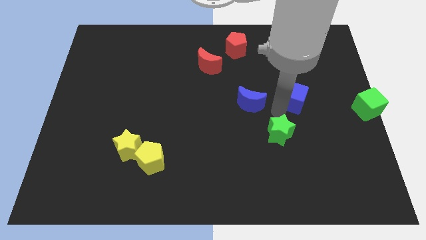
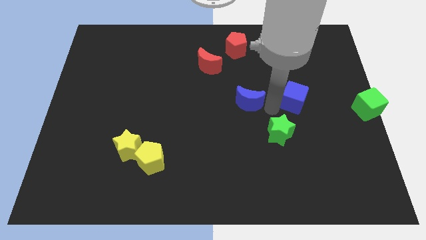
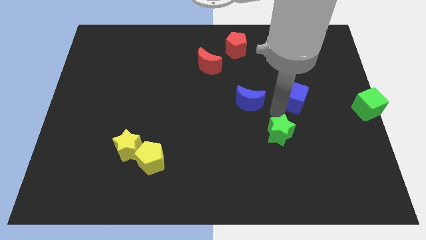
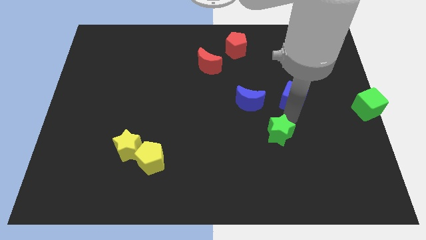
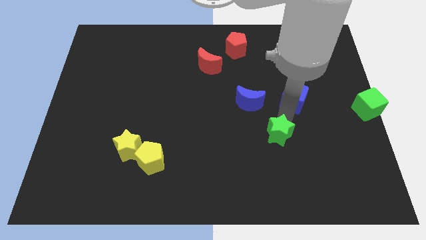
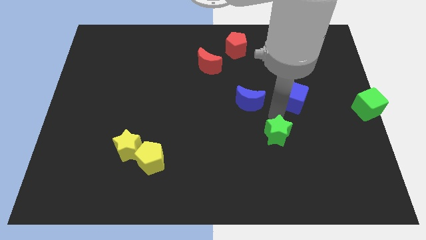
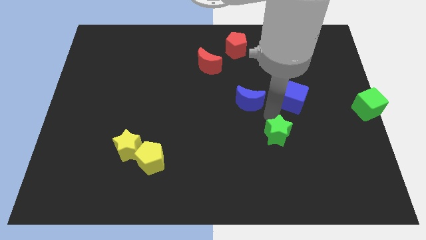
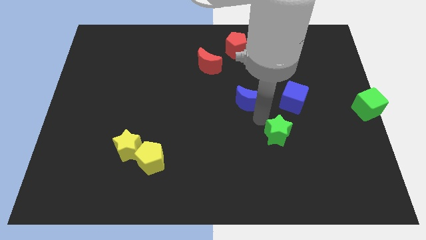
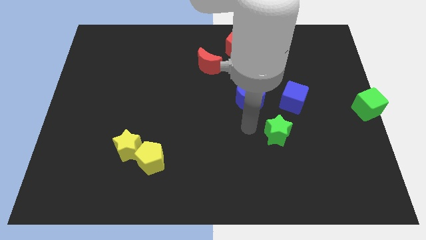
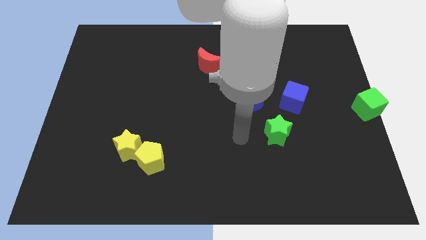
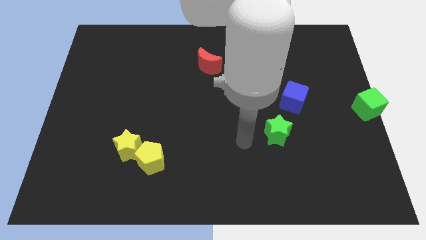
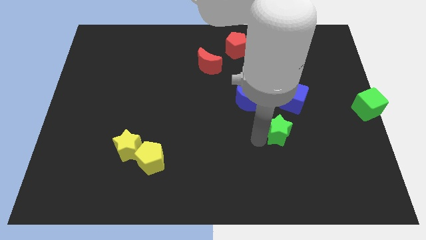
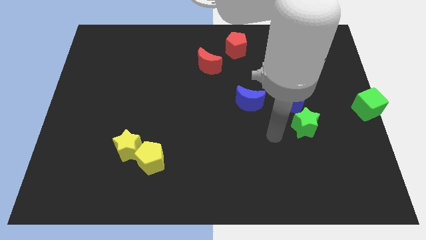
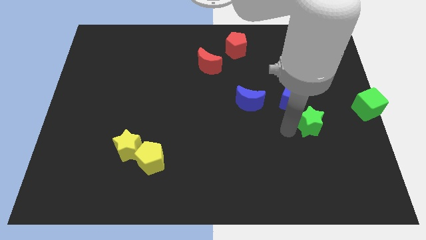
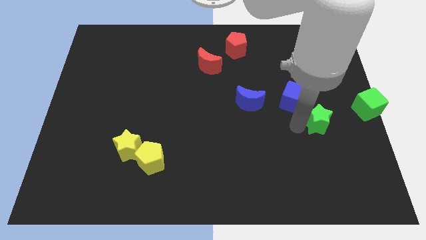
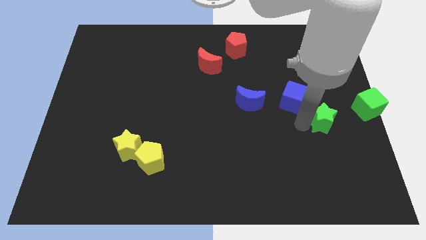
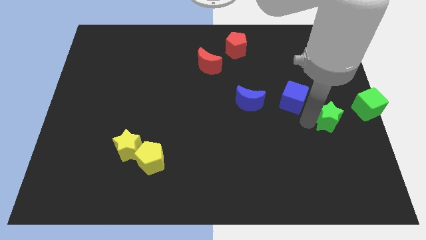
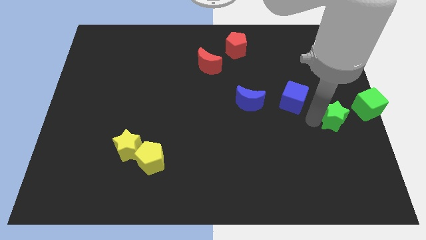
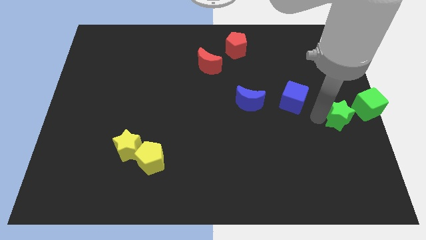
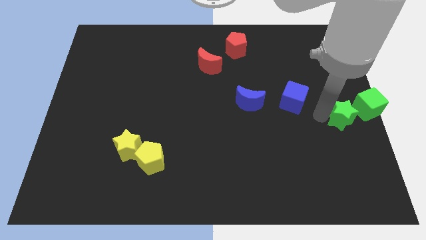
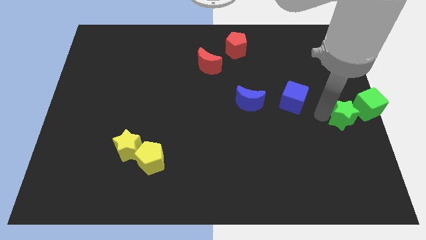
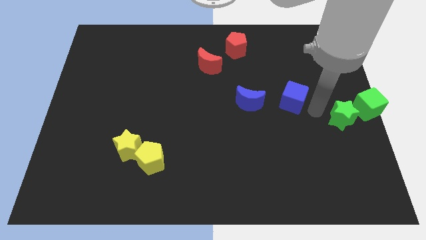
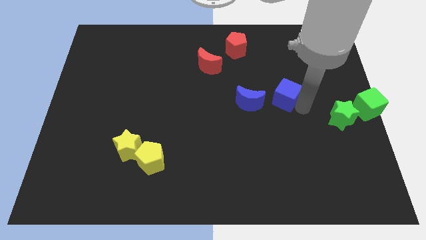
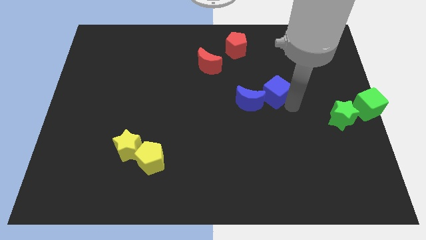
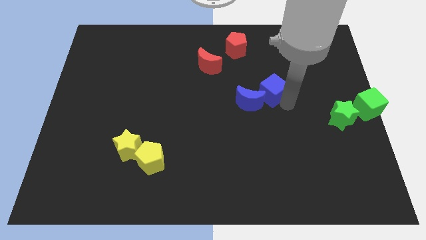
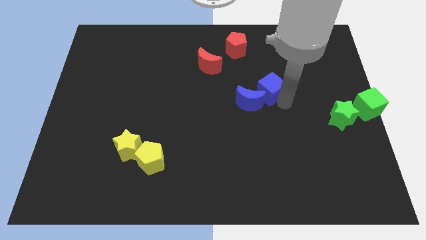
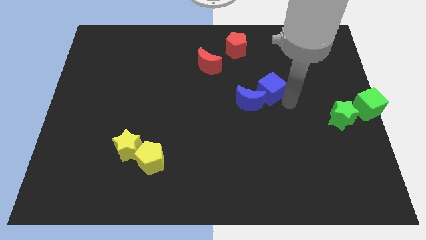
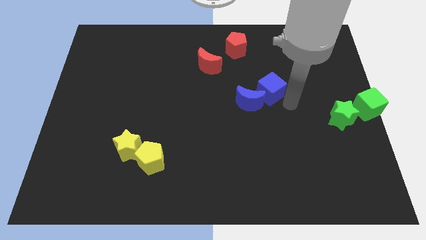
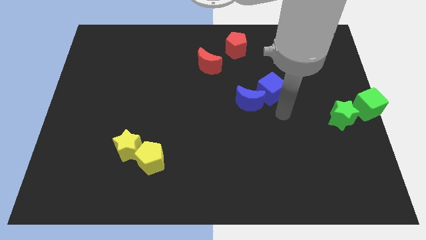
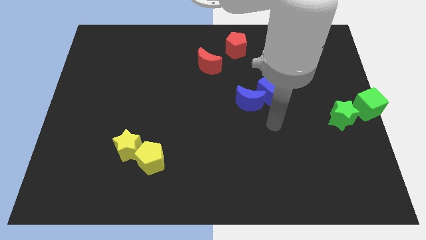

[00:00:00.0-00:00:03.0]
pair up the similar color blocks together

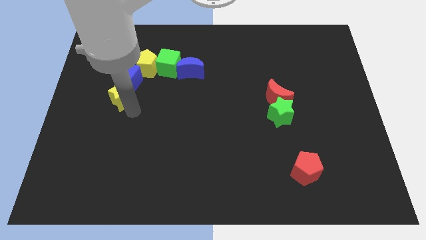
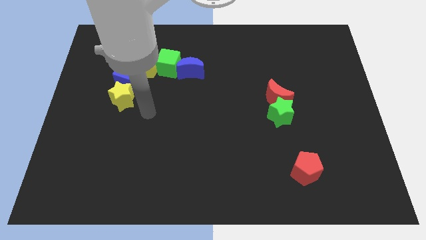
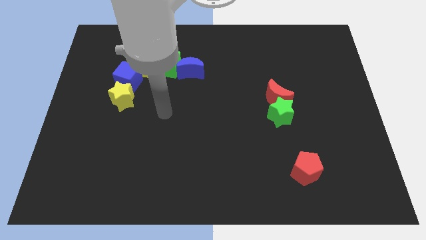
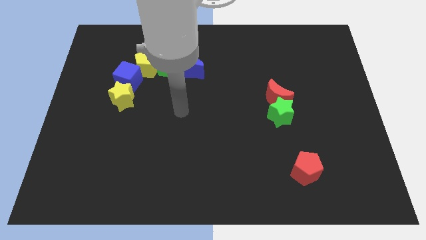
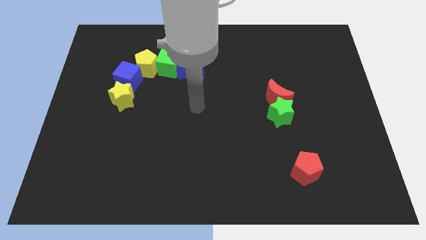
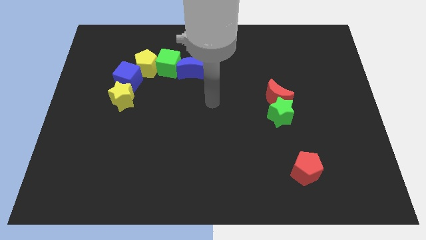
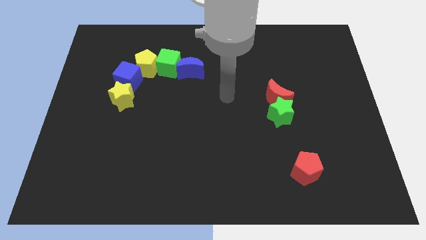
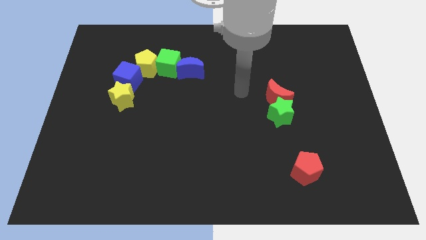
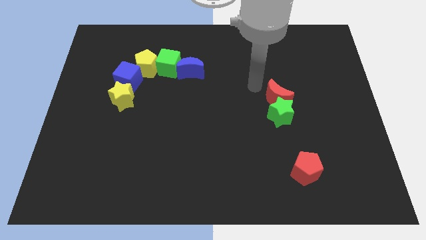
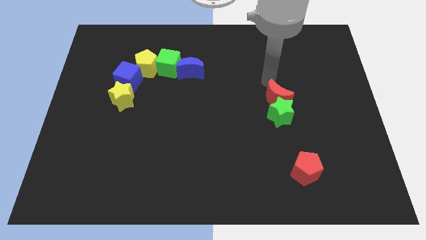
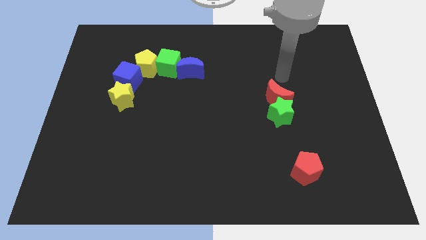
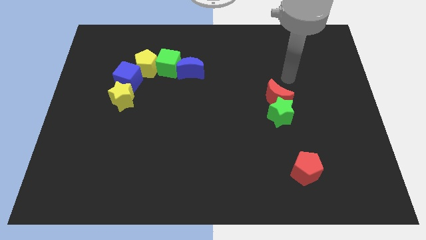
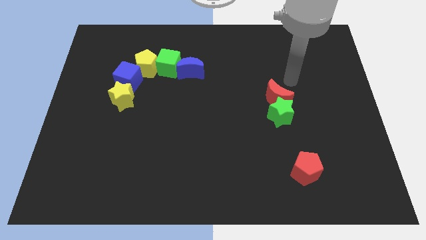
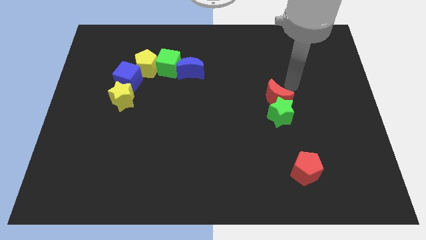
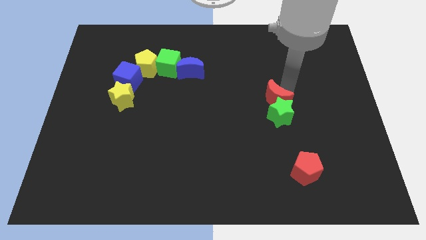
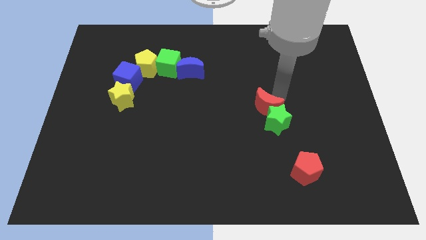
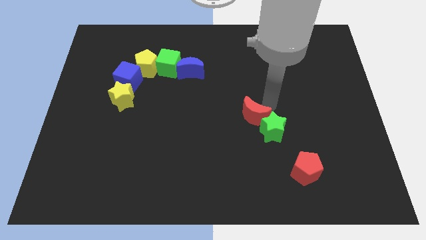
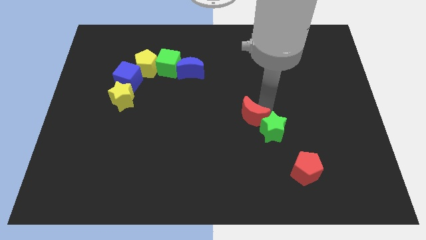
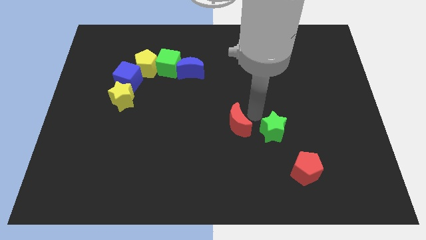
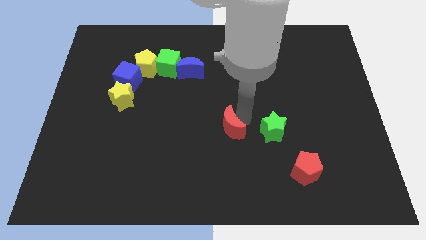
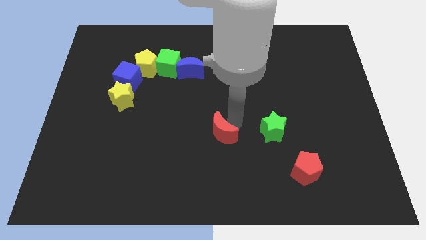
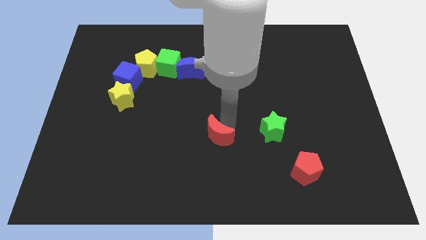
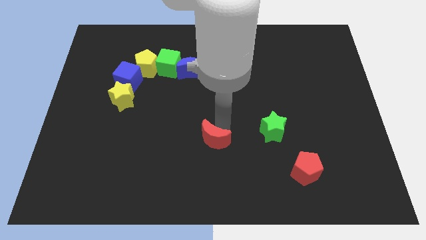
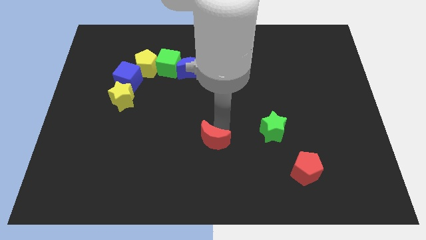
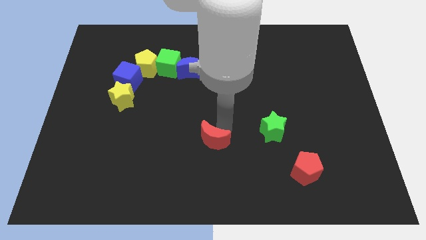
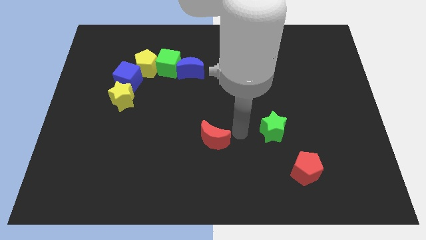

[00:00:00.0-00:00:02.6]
move the red moon to the center

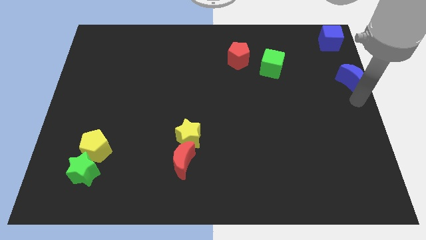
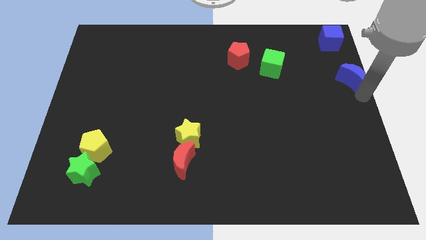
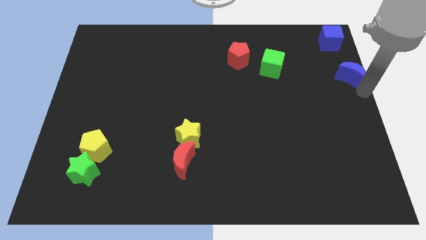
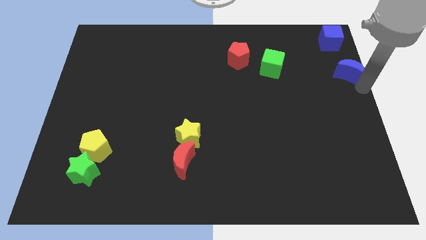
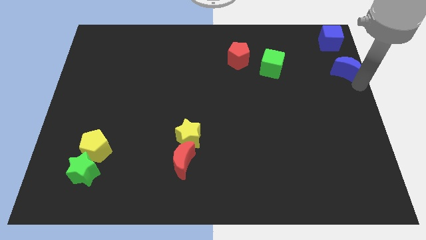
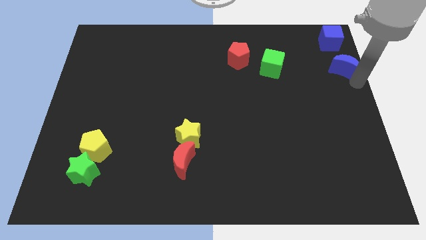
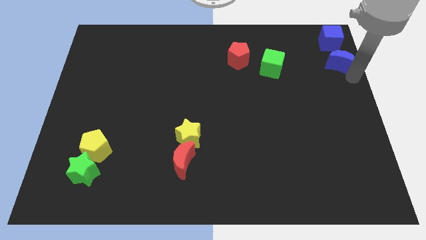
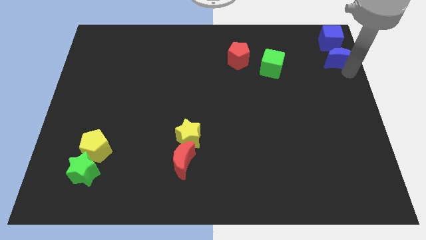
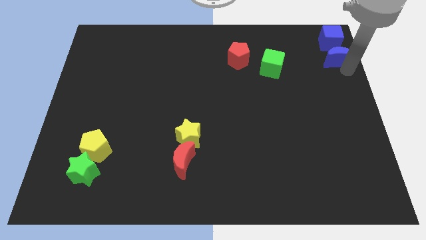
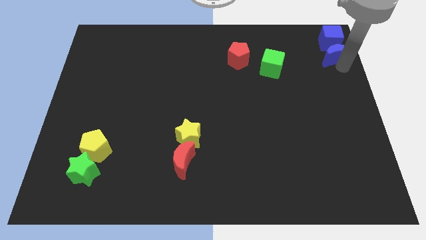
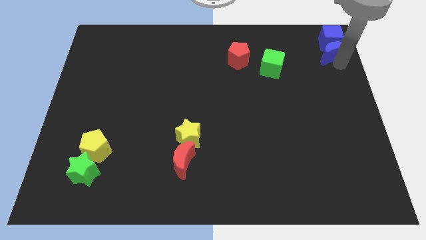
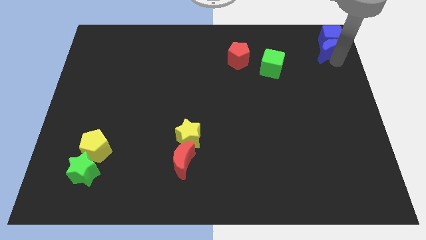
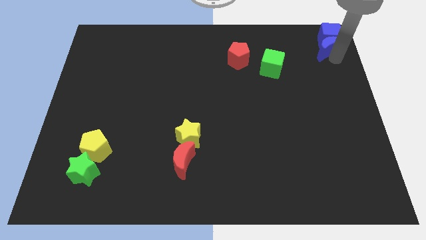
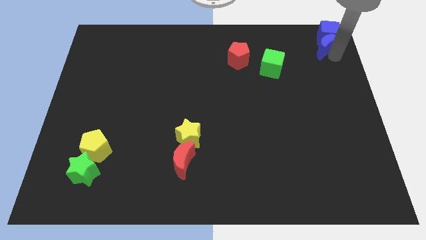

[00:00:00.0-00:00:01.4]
push blue moon into the blue cube

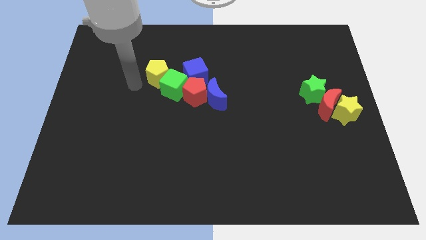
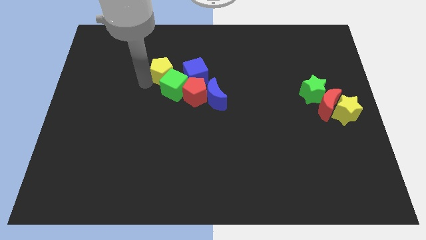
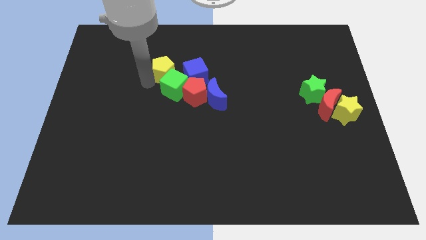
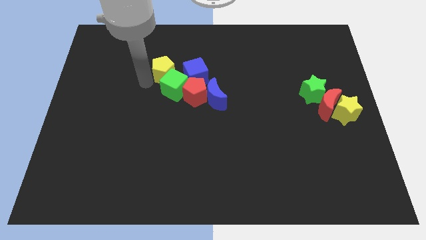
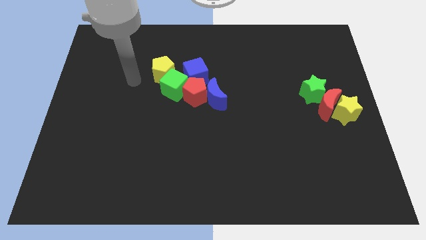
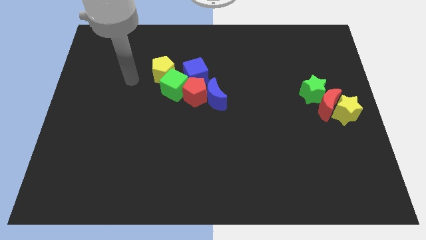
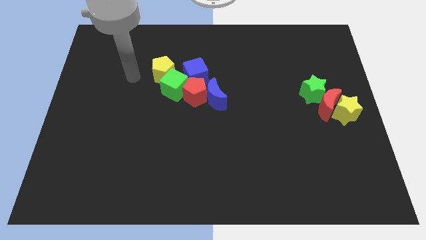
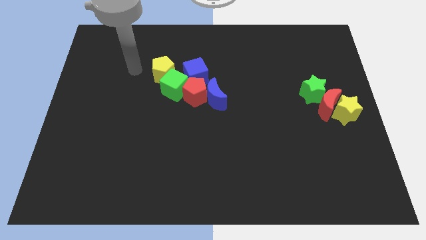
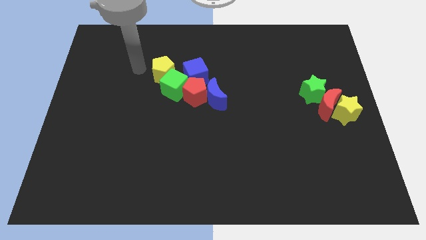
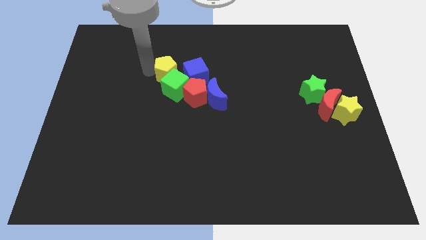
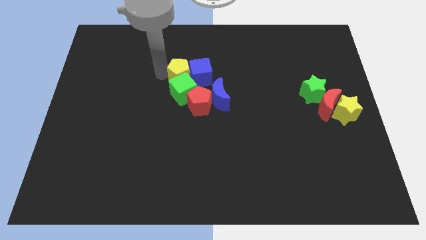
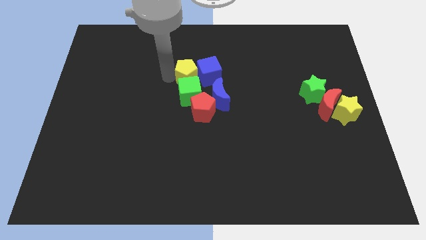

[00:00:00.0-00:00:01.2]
place yellow pentagon above green cube

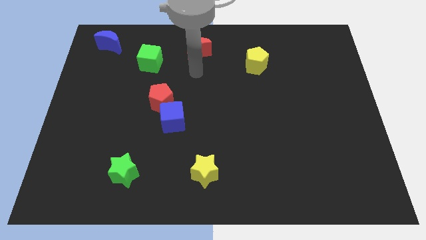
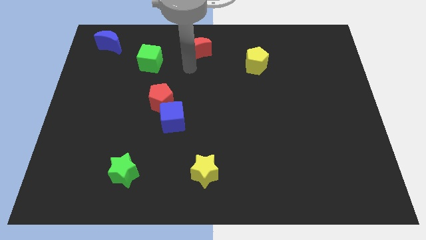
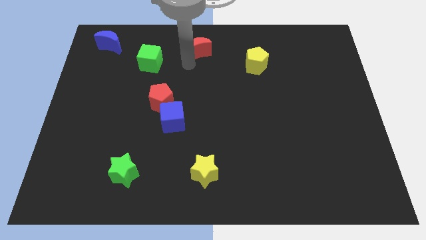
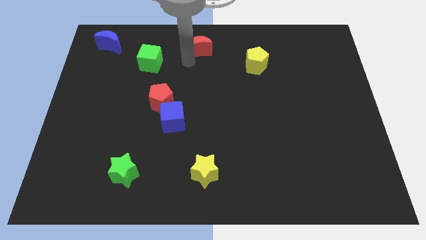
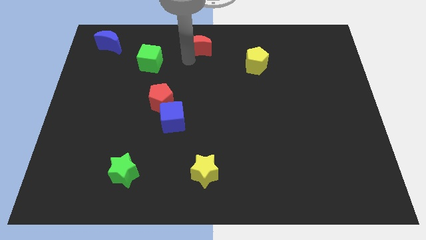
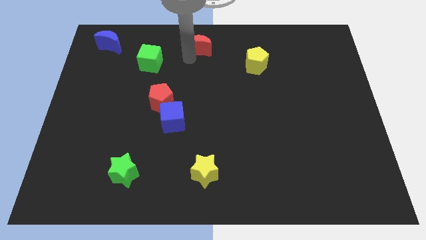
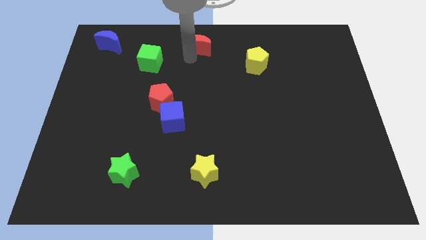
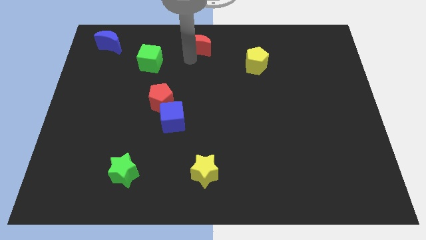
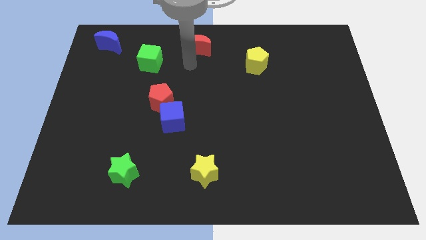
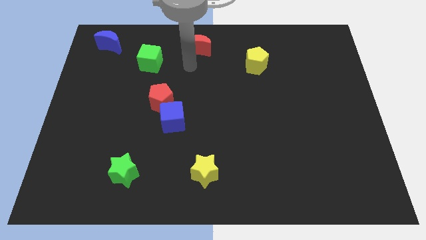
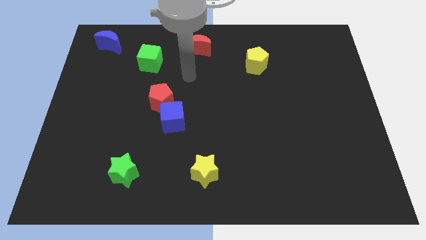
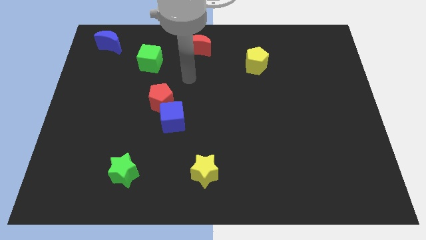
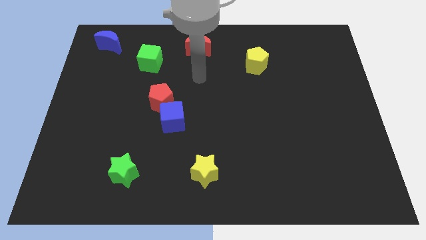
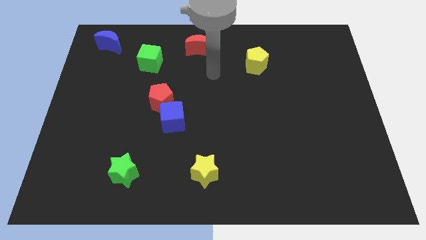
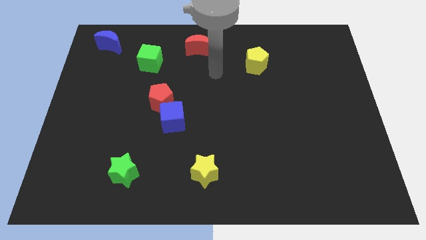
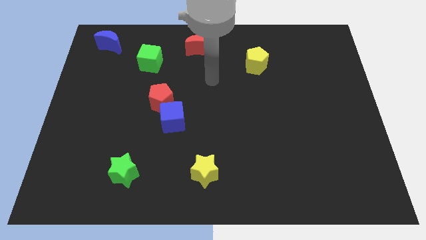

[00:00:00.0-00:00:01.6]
move the red moon slightly up
